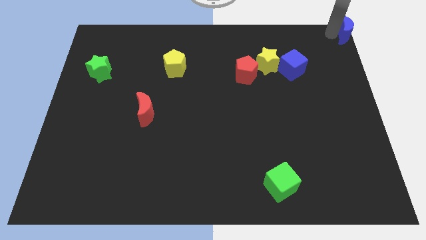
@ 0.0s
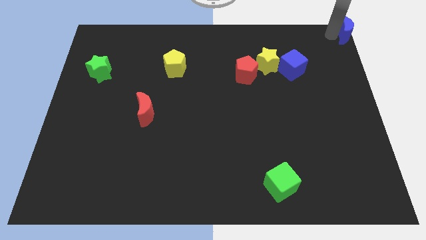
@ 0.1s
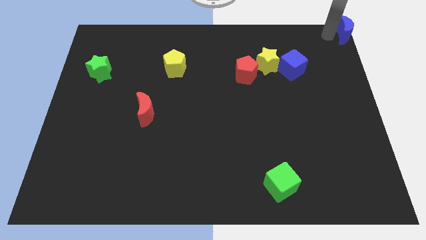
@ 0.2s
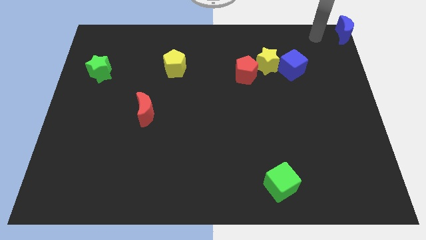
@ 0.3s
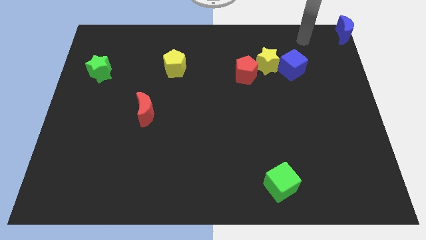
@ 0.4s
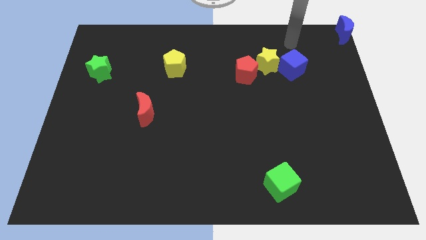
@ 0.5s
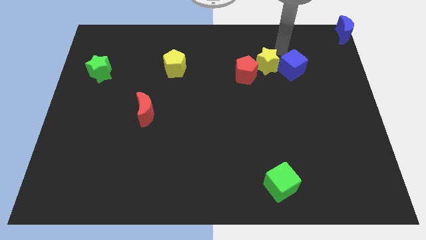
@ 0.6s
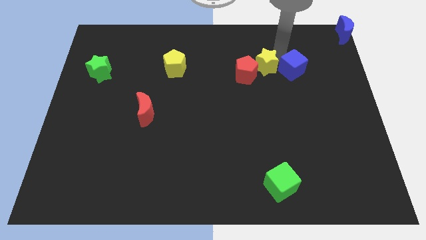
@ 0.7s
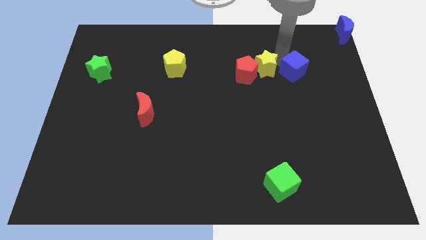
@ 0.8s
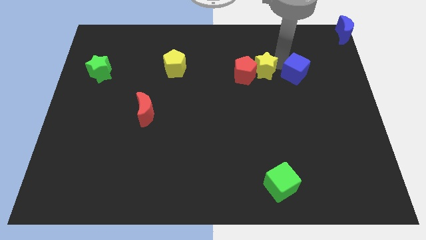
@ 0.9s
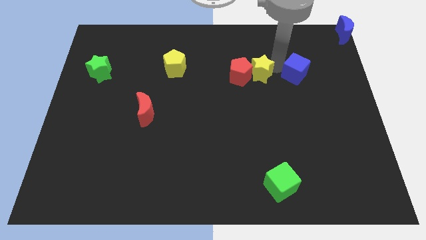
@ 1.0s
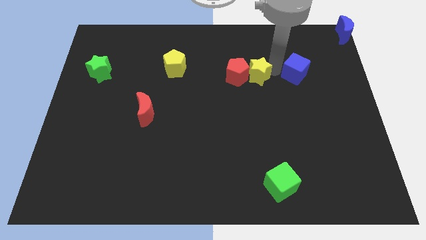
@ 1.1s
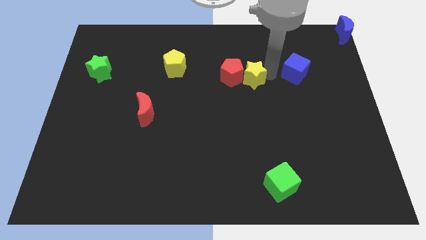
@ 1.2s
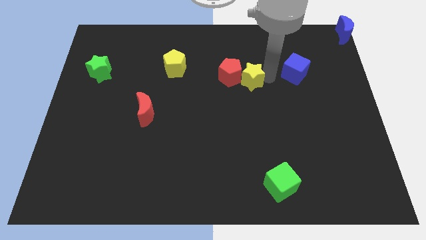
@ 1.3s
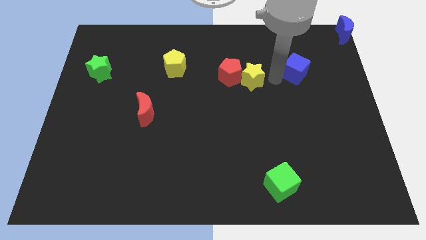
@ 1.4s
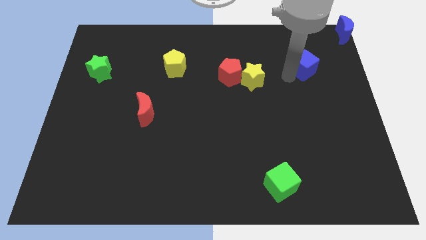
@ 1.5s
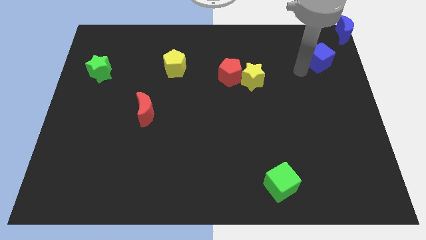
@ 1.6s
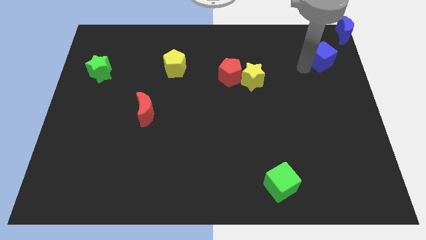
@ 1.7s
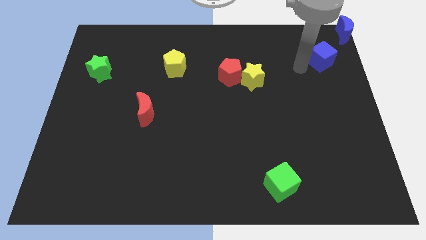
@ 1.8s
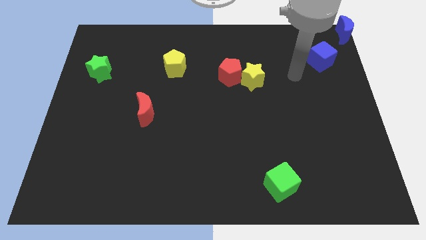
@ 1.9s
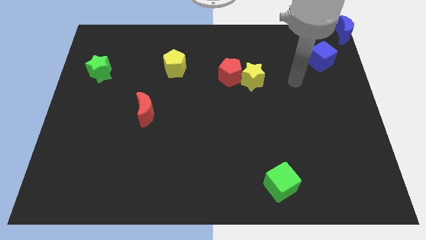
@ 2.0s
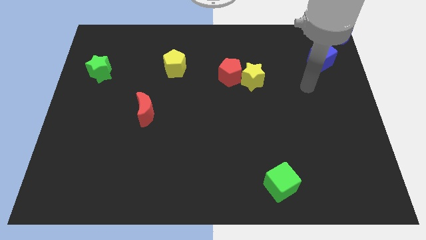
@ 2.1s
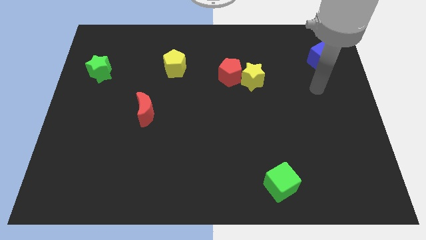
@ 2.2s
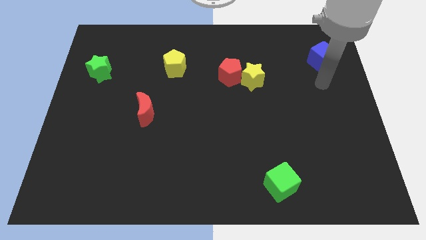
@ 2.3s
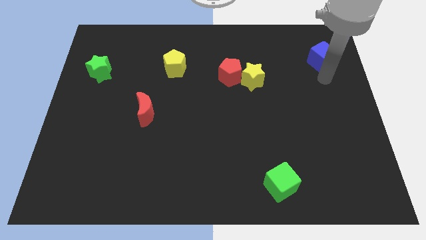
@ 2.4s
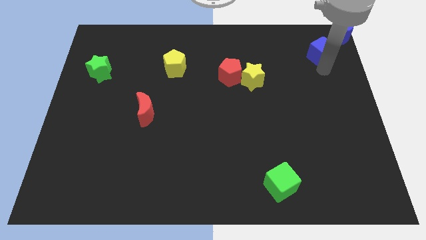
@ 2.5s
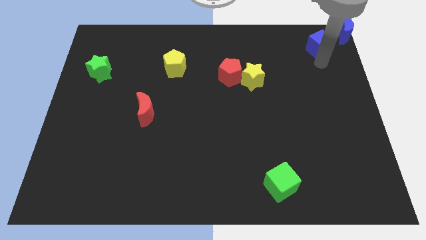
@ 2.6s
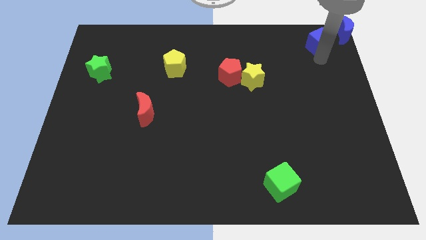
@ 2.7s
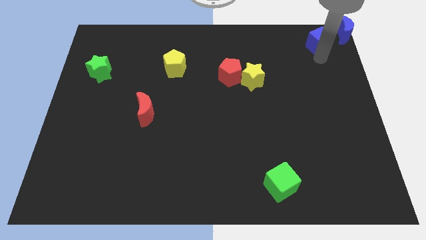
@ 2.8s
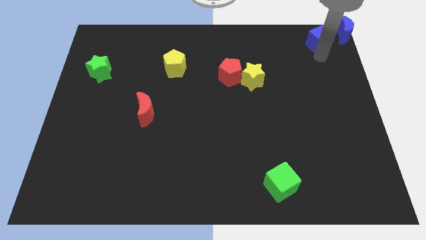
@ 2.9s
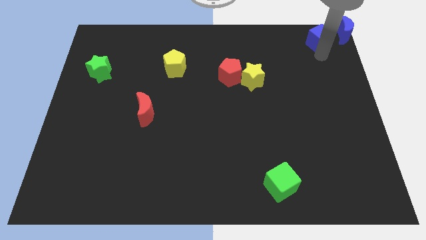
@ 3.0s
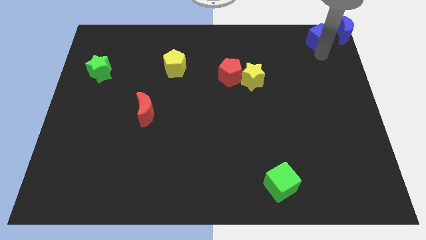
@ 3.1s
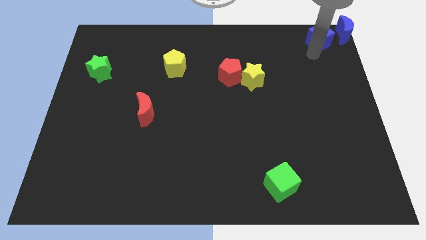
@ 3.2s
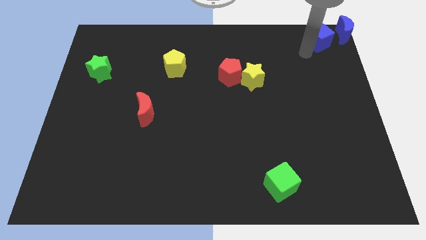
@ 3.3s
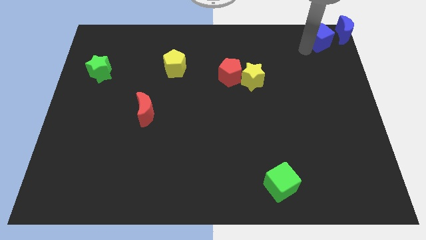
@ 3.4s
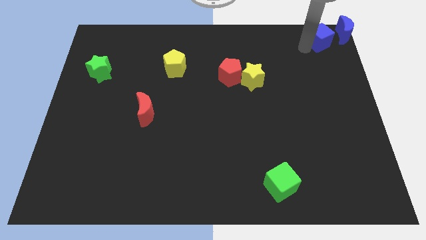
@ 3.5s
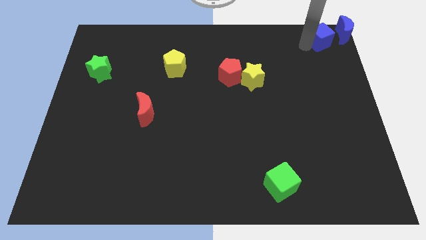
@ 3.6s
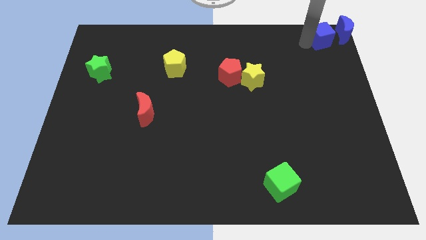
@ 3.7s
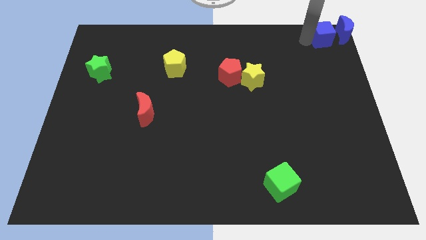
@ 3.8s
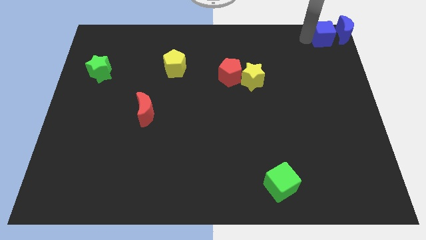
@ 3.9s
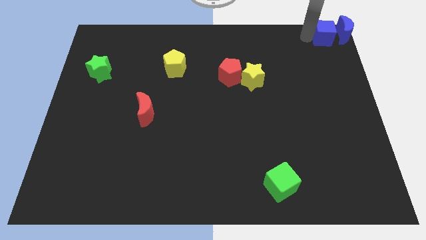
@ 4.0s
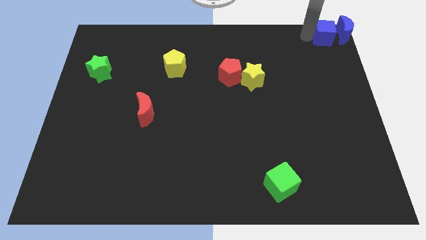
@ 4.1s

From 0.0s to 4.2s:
separate blue cube from the yellow star

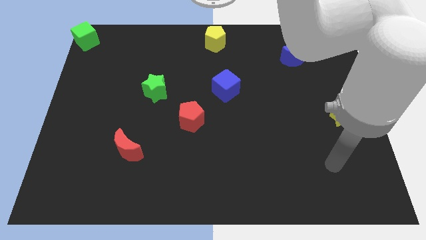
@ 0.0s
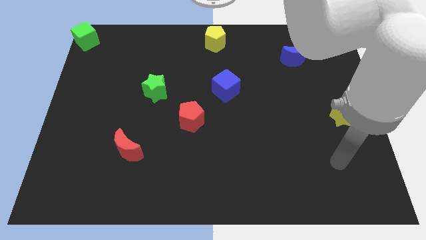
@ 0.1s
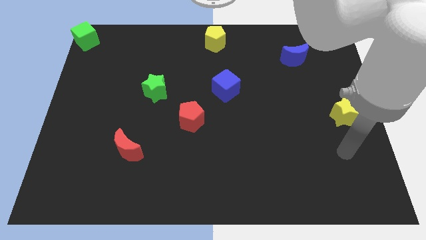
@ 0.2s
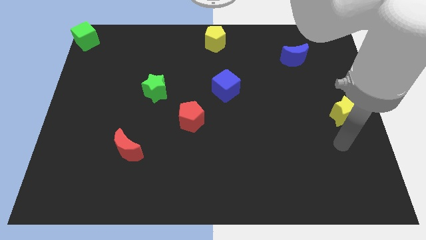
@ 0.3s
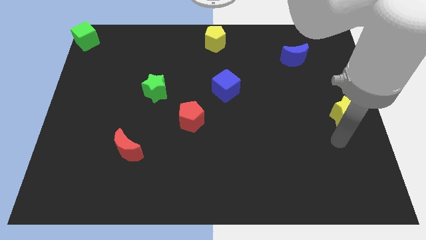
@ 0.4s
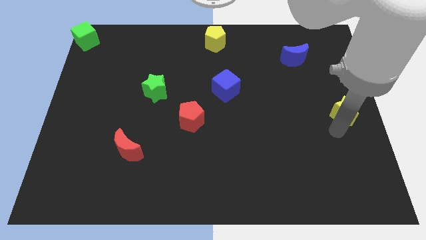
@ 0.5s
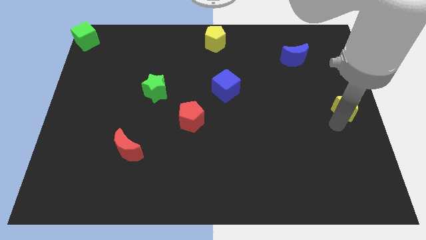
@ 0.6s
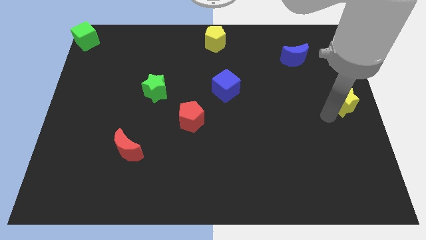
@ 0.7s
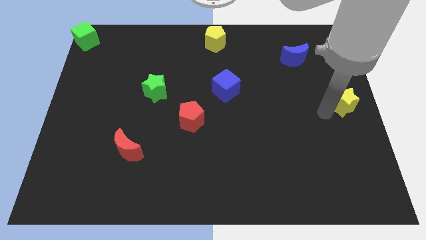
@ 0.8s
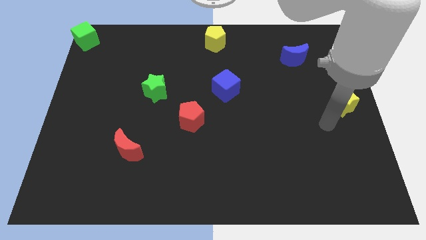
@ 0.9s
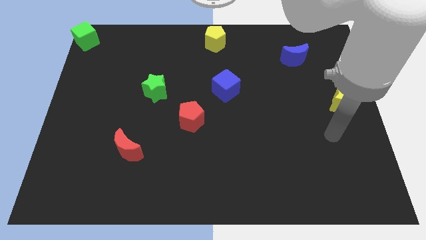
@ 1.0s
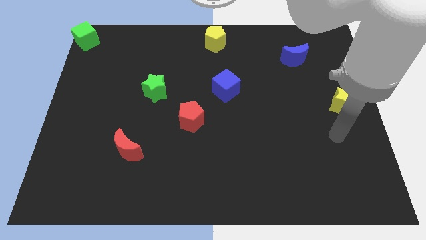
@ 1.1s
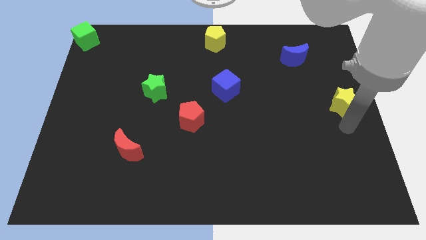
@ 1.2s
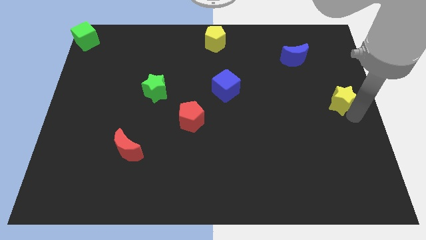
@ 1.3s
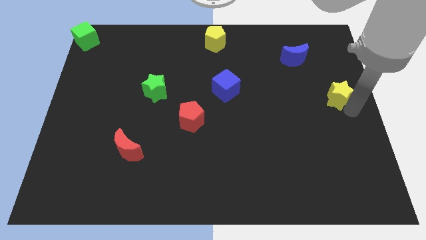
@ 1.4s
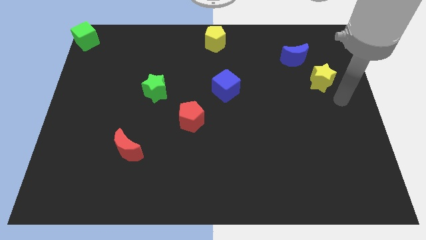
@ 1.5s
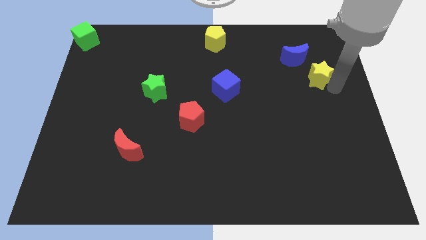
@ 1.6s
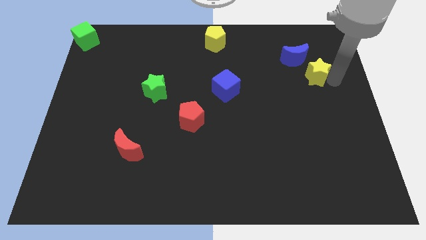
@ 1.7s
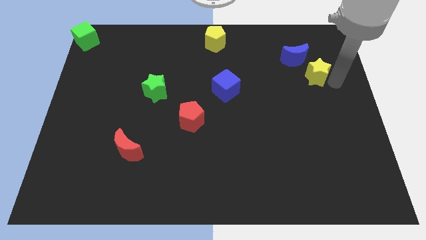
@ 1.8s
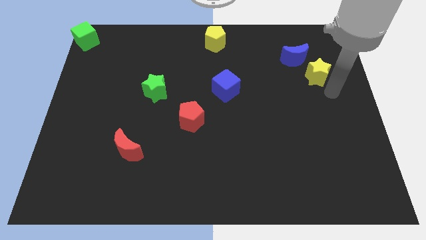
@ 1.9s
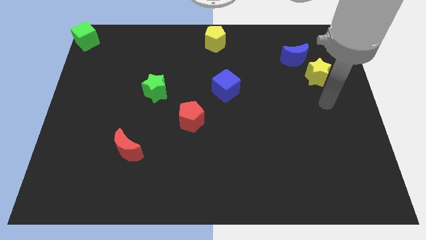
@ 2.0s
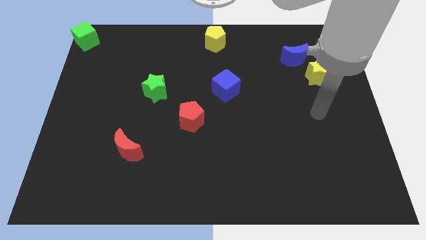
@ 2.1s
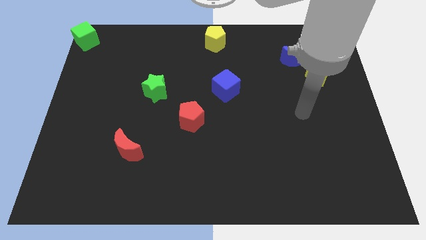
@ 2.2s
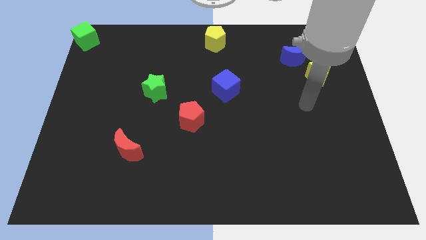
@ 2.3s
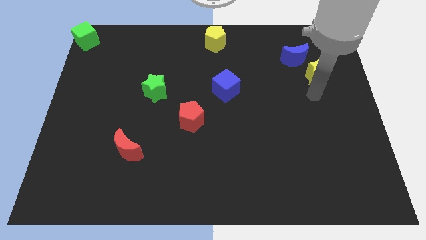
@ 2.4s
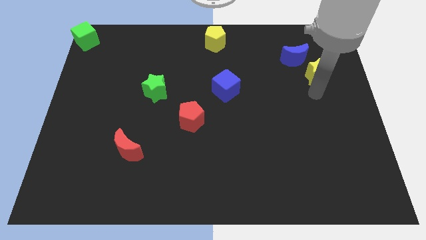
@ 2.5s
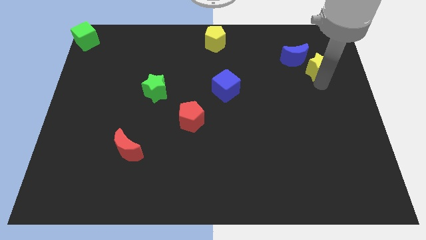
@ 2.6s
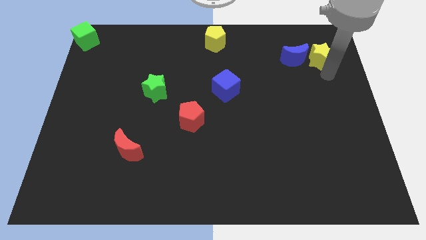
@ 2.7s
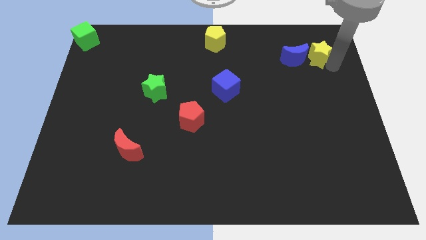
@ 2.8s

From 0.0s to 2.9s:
move the yellow star to the right side of the blue semicircle

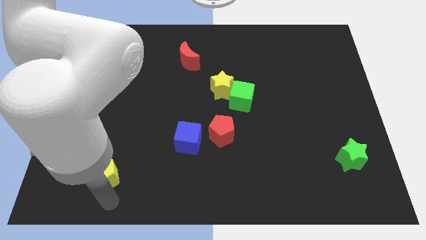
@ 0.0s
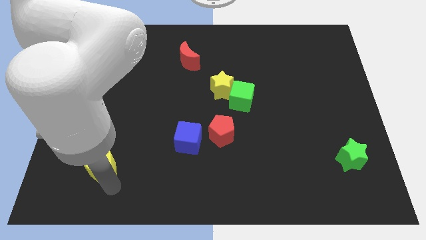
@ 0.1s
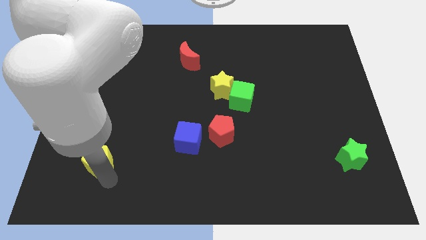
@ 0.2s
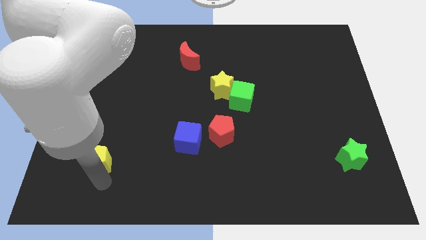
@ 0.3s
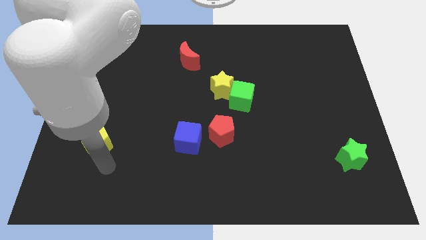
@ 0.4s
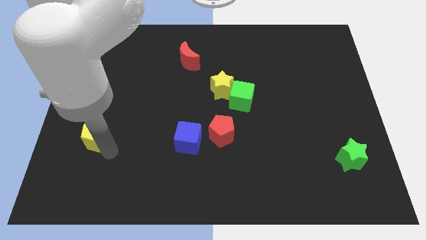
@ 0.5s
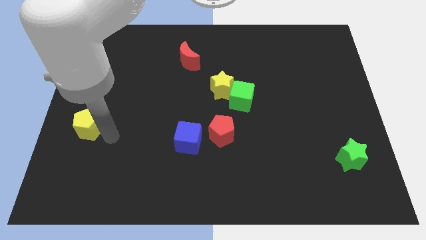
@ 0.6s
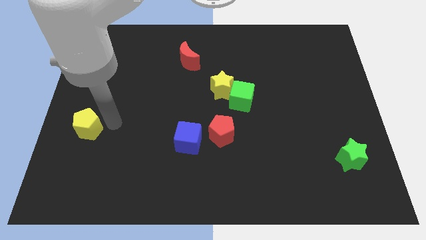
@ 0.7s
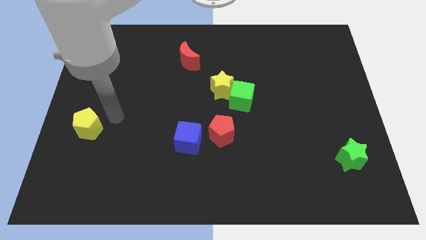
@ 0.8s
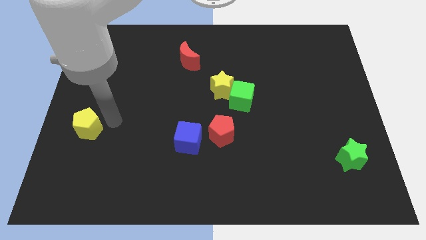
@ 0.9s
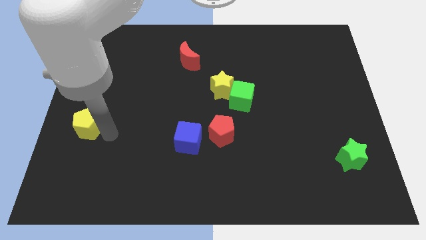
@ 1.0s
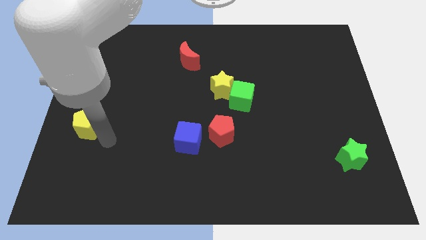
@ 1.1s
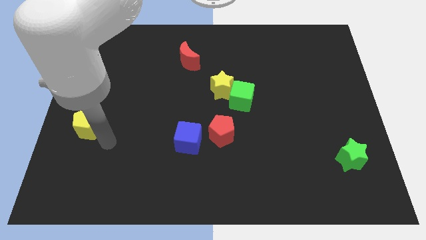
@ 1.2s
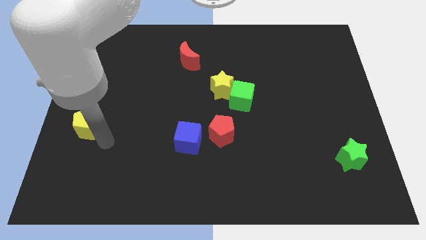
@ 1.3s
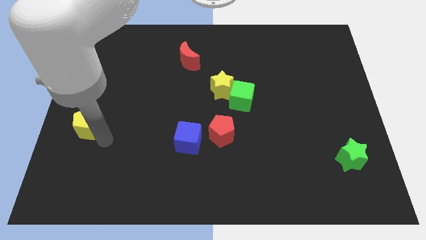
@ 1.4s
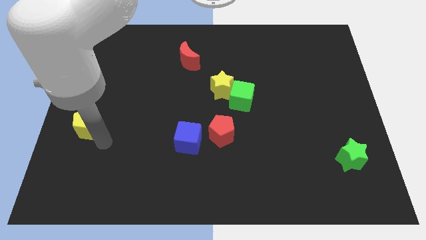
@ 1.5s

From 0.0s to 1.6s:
drag the yellow pentagon towards the top

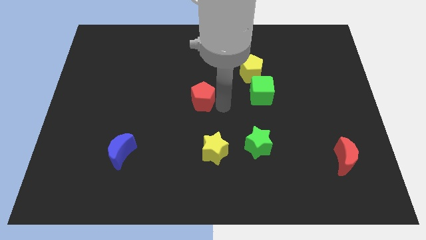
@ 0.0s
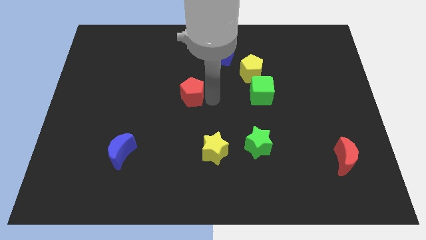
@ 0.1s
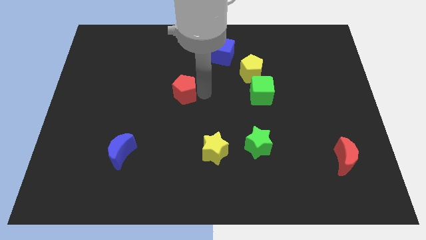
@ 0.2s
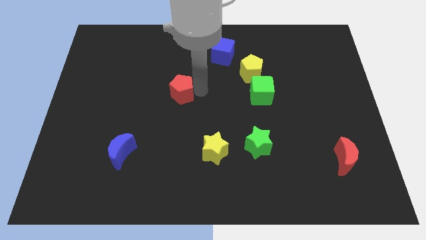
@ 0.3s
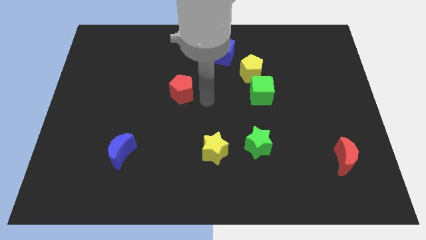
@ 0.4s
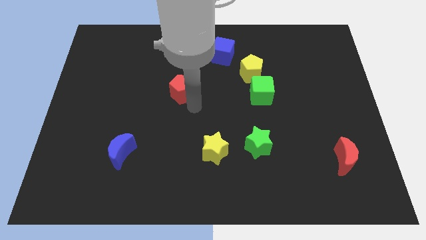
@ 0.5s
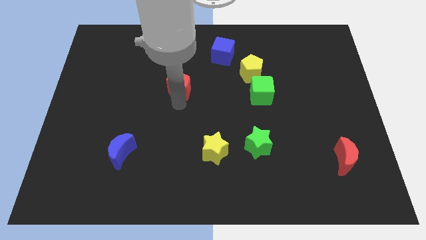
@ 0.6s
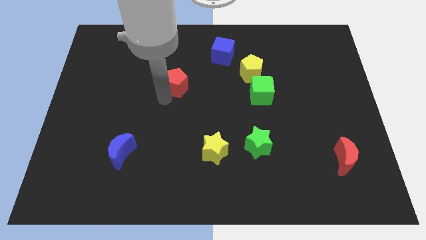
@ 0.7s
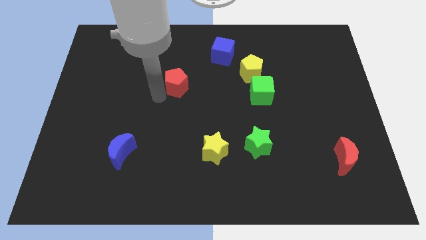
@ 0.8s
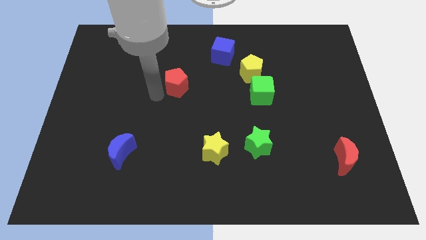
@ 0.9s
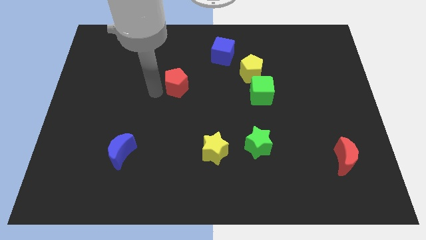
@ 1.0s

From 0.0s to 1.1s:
move the red pentagon diagonally to the blue moon
